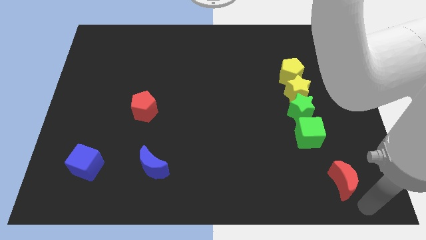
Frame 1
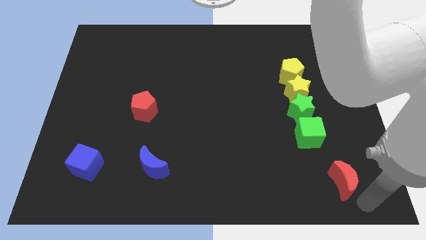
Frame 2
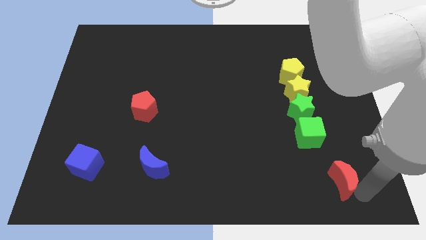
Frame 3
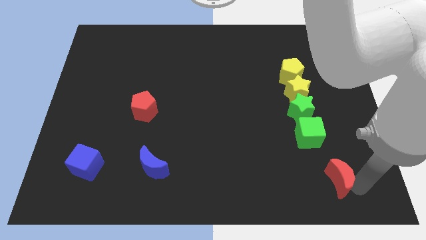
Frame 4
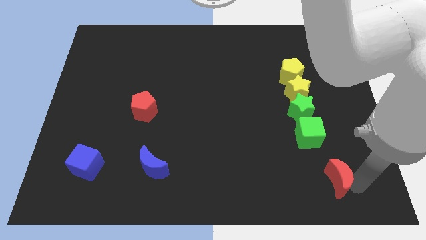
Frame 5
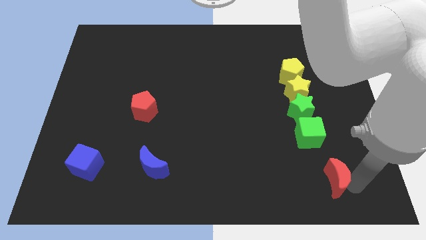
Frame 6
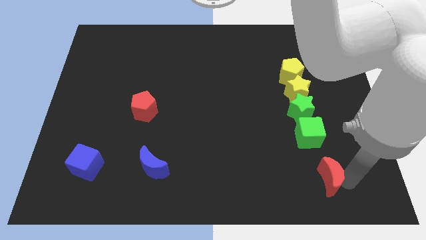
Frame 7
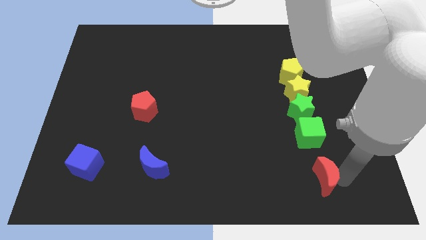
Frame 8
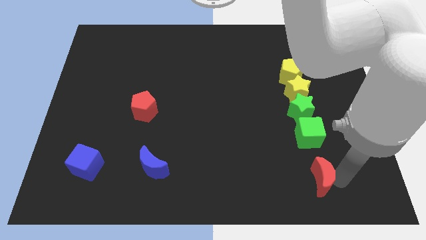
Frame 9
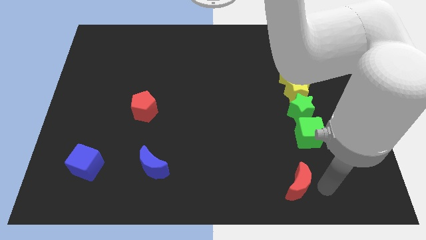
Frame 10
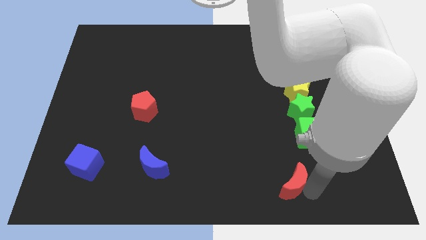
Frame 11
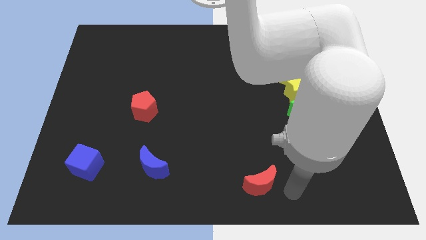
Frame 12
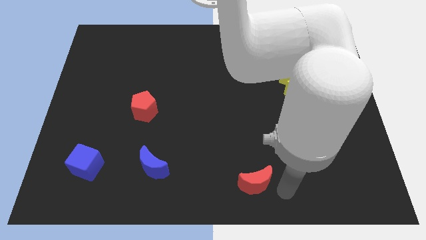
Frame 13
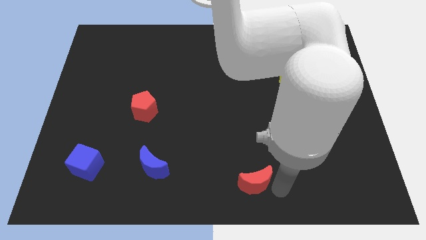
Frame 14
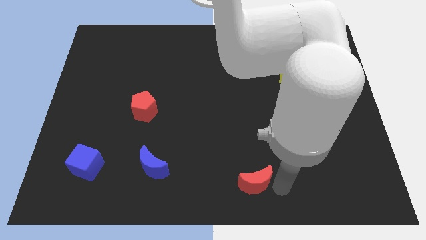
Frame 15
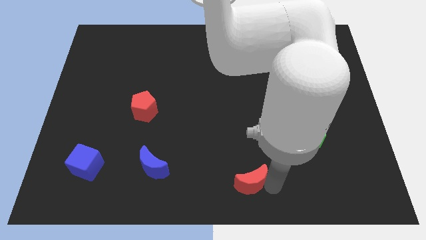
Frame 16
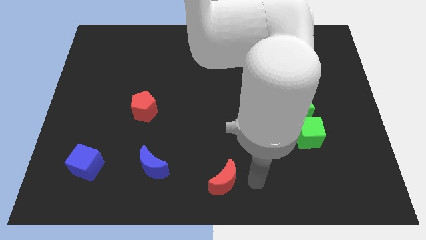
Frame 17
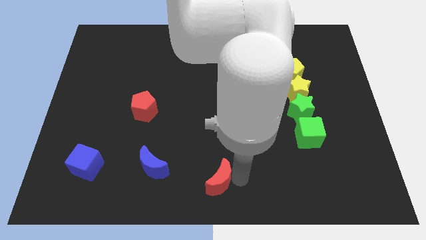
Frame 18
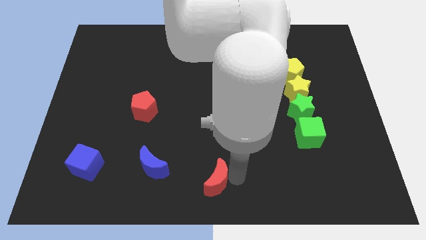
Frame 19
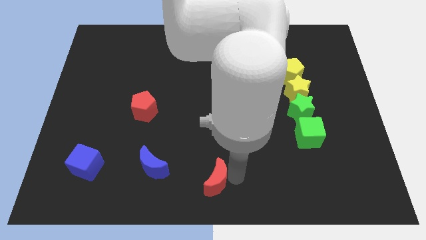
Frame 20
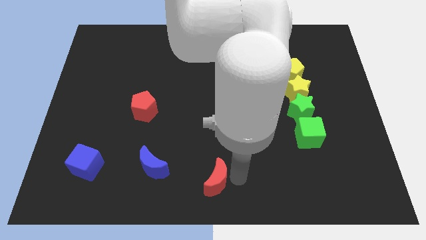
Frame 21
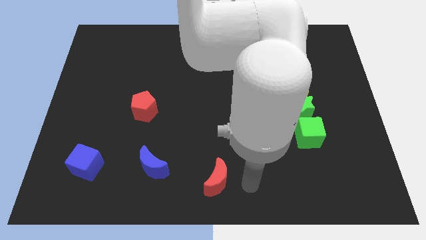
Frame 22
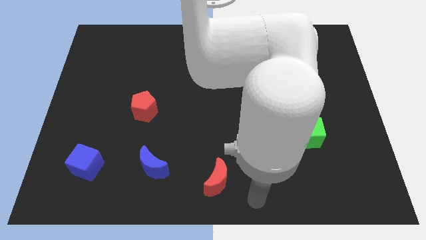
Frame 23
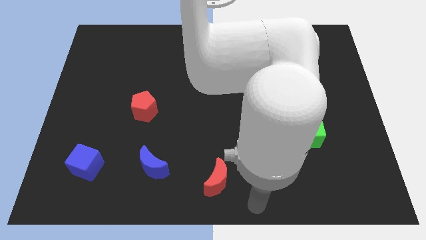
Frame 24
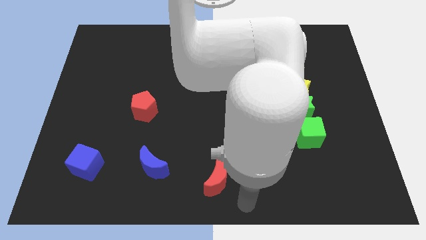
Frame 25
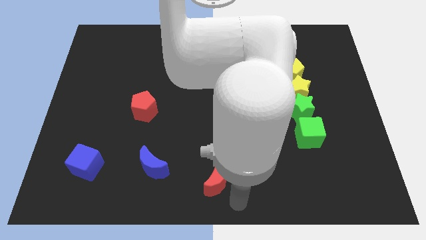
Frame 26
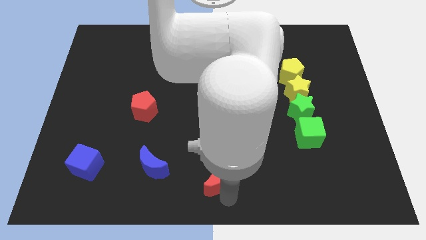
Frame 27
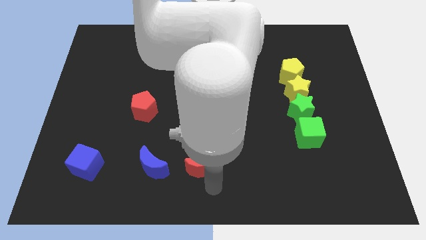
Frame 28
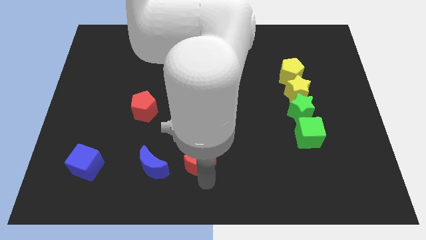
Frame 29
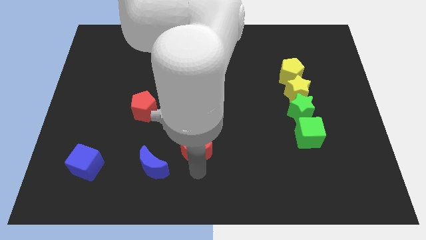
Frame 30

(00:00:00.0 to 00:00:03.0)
move the red crescent to the right of the blue crescent

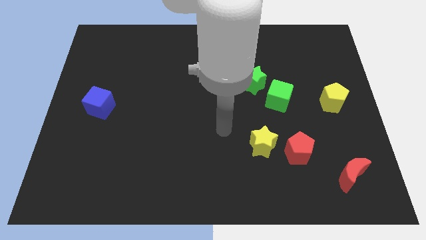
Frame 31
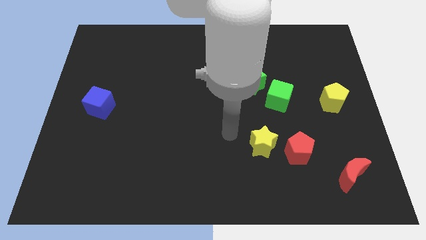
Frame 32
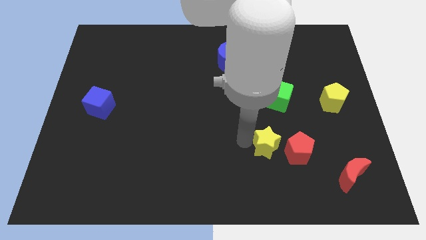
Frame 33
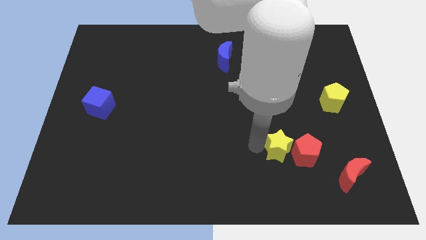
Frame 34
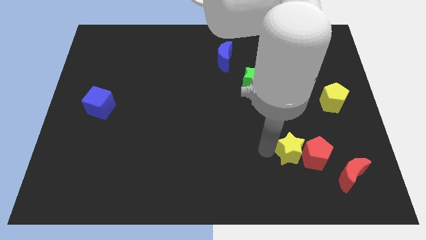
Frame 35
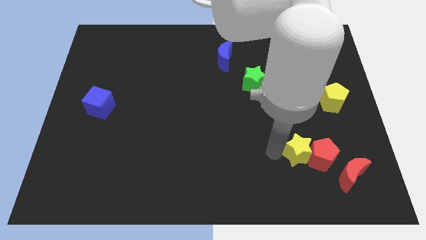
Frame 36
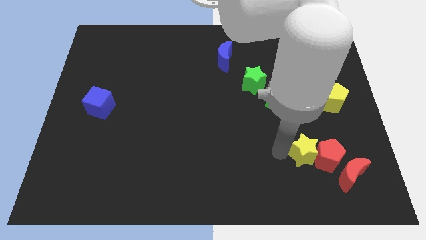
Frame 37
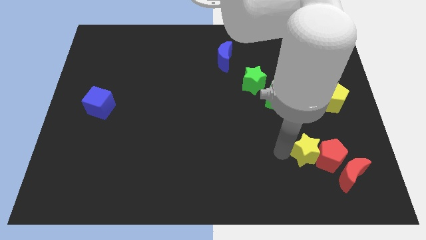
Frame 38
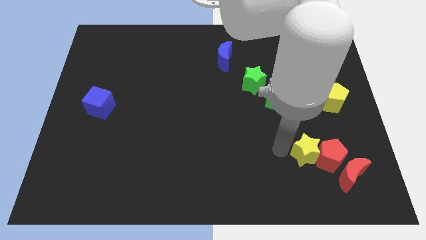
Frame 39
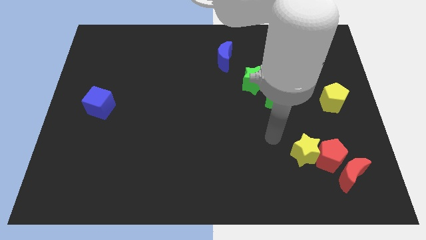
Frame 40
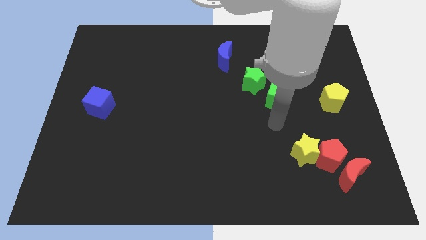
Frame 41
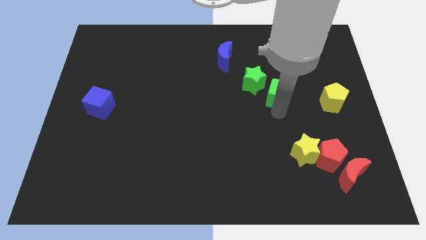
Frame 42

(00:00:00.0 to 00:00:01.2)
move yellow star along with the red pentagon slightly to the right

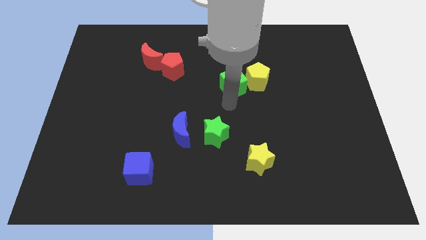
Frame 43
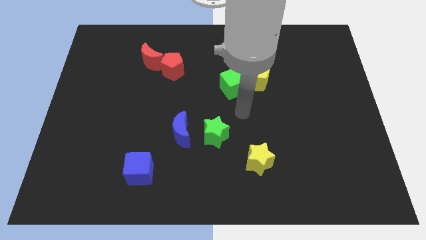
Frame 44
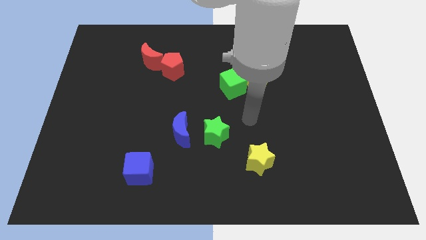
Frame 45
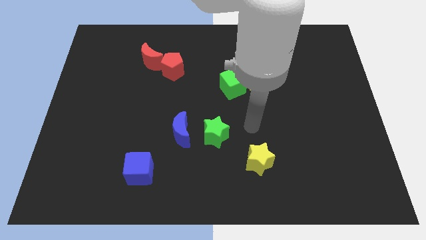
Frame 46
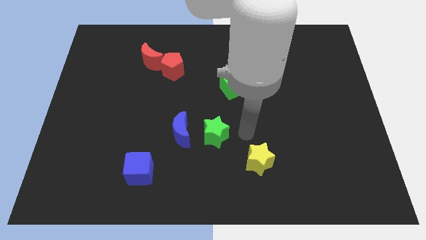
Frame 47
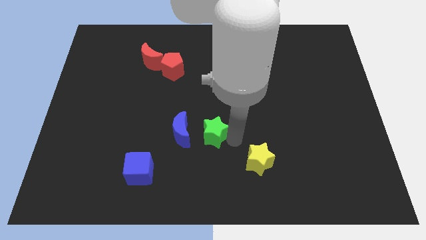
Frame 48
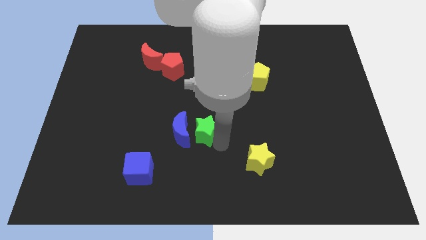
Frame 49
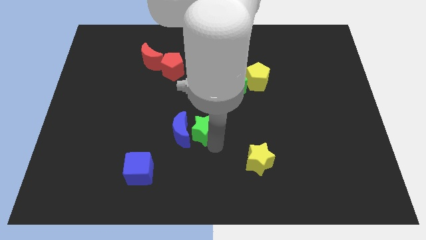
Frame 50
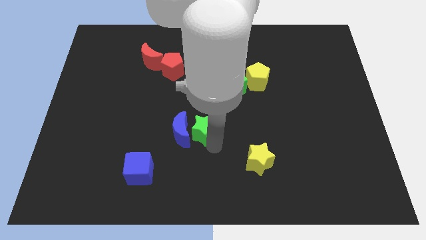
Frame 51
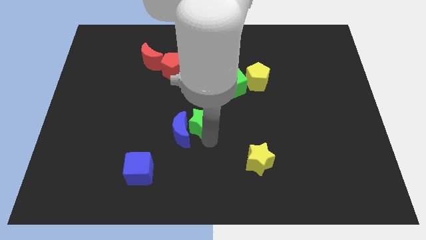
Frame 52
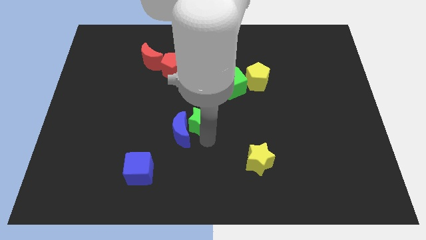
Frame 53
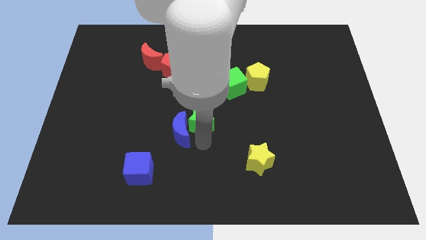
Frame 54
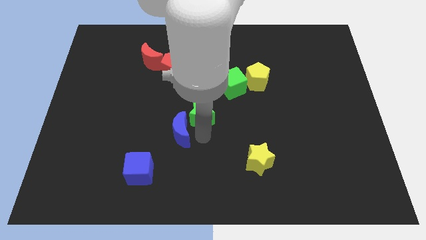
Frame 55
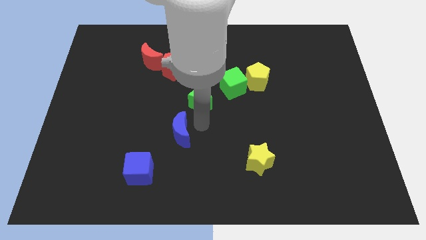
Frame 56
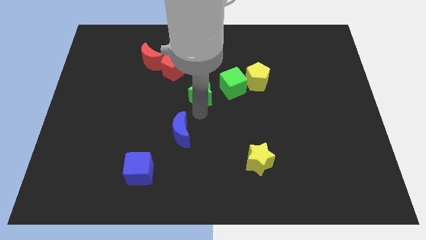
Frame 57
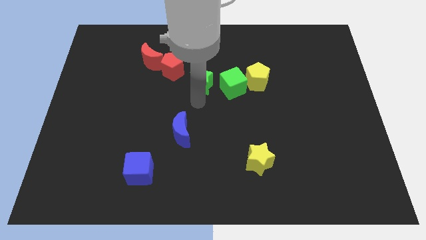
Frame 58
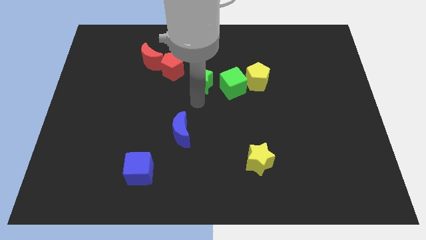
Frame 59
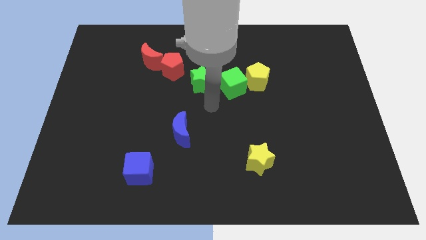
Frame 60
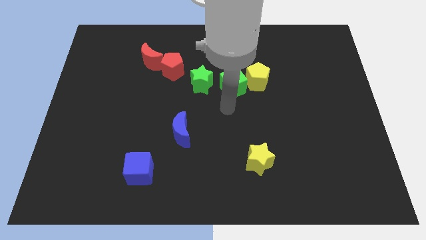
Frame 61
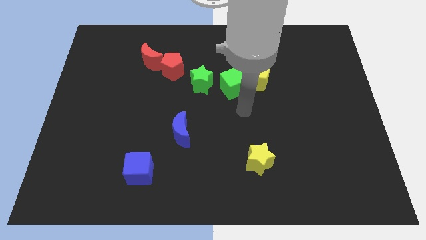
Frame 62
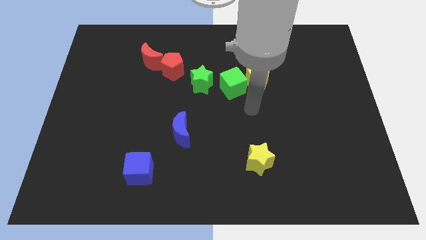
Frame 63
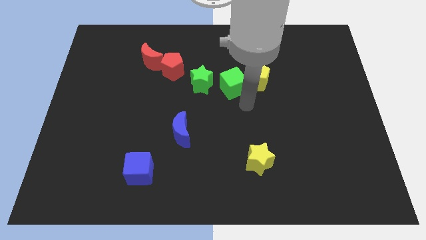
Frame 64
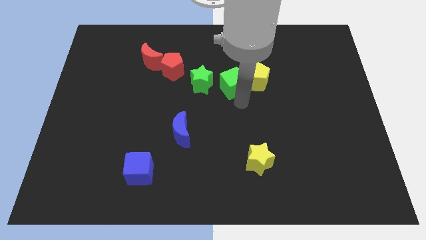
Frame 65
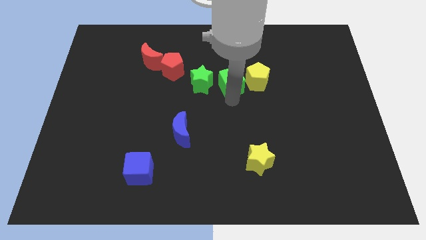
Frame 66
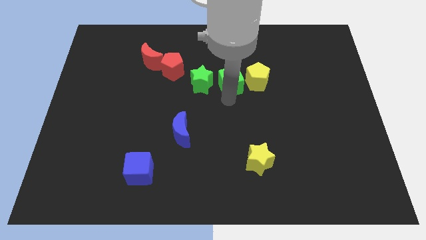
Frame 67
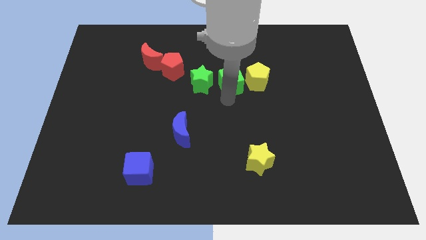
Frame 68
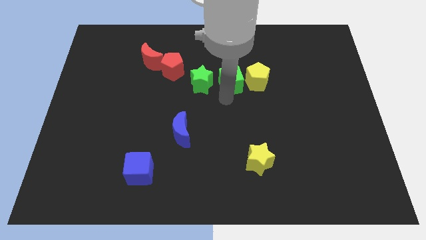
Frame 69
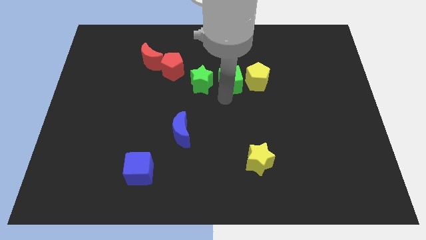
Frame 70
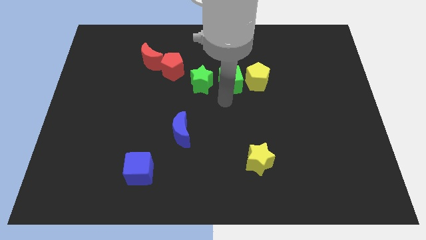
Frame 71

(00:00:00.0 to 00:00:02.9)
place the green star to the bottom right of red pentagon

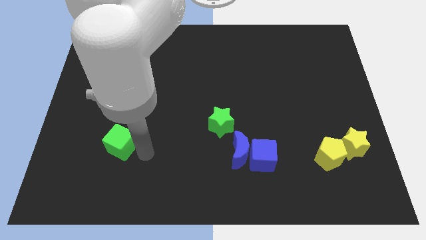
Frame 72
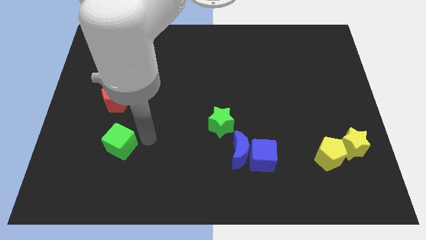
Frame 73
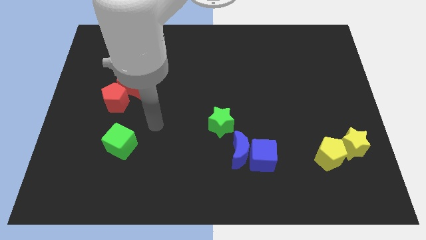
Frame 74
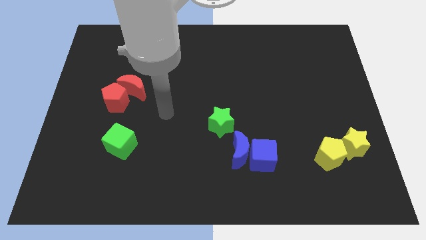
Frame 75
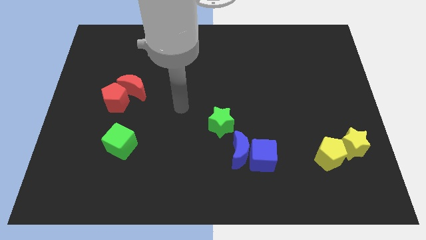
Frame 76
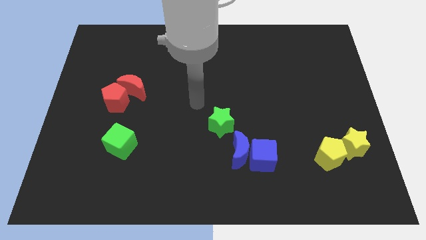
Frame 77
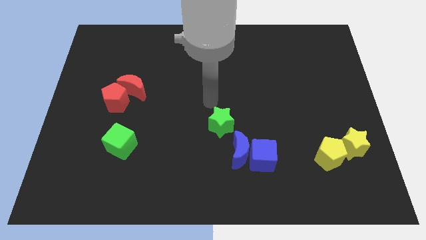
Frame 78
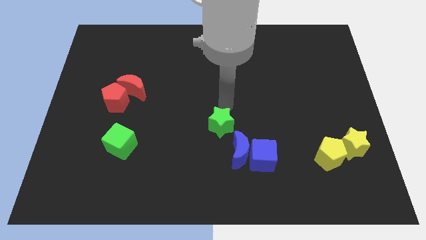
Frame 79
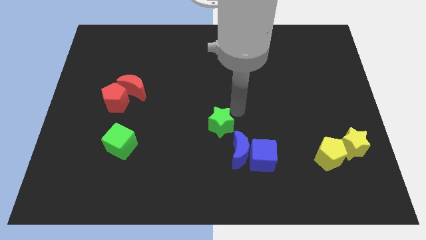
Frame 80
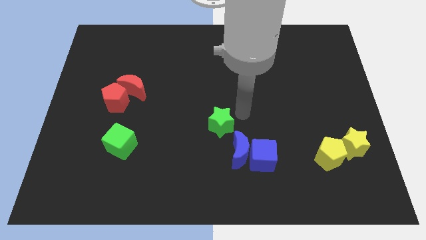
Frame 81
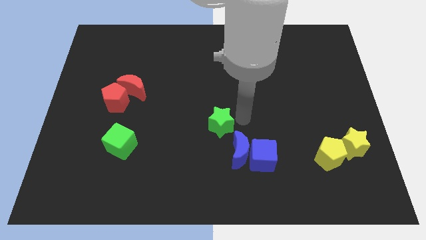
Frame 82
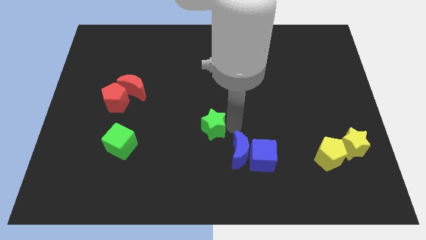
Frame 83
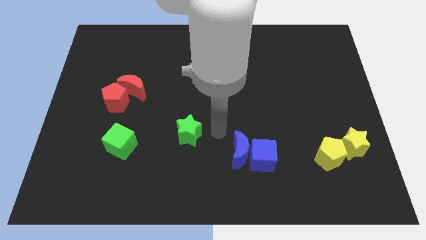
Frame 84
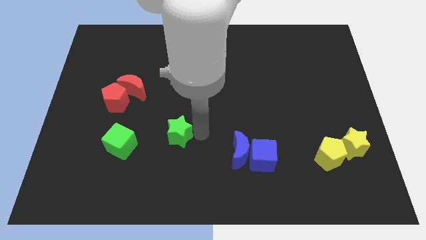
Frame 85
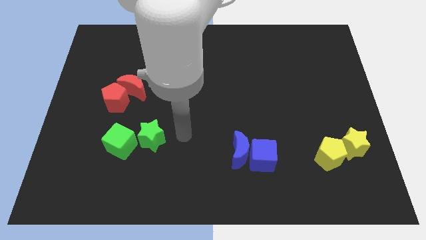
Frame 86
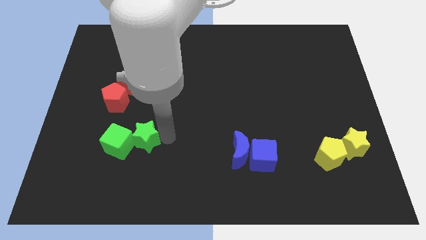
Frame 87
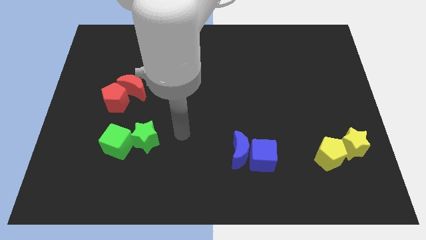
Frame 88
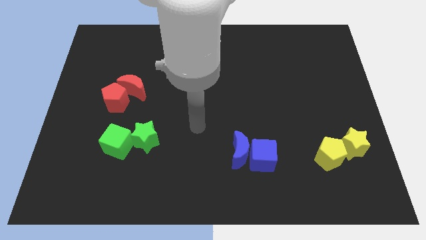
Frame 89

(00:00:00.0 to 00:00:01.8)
put green blocks together

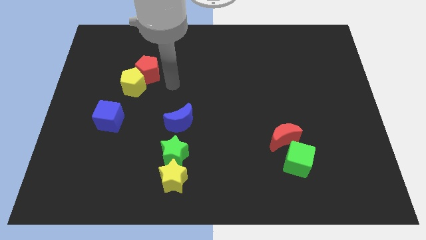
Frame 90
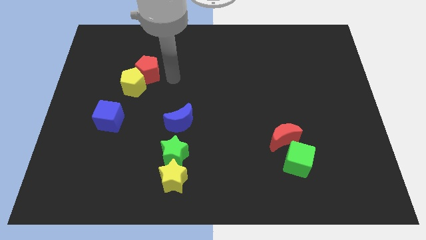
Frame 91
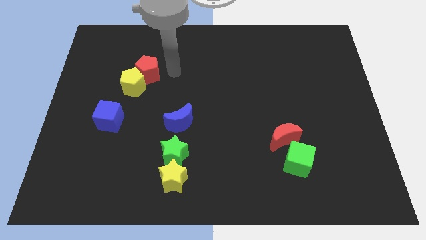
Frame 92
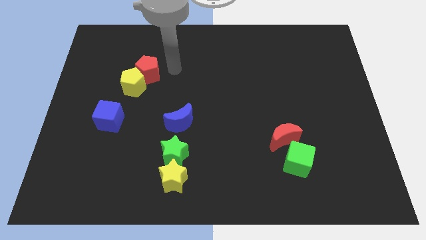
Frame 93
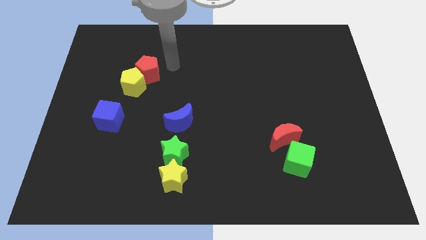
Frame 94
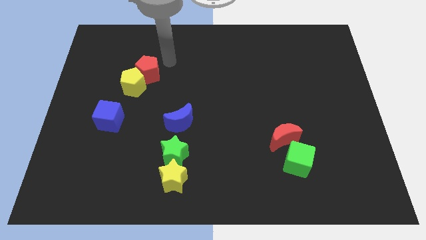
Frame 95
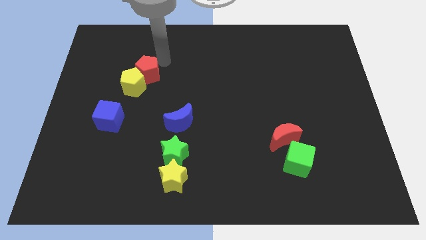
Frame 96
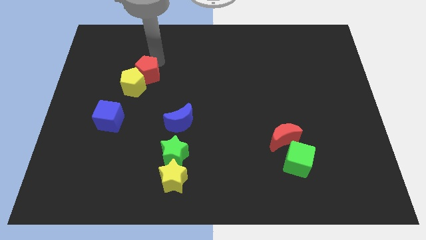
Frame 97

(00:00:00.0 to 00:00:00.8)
put arm above red pentagon
